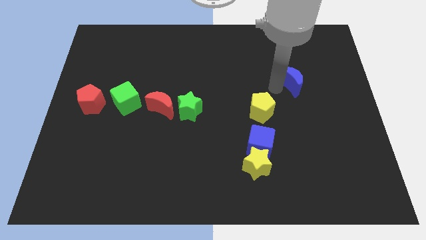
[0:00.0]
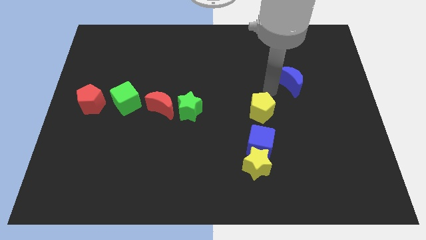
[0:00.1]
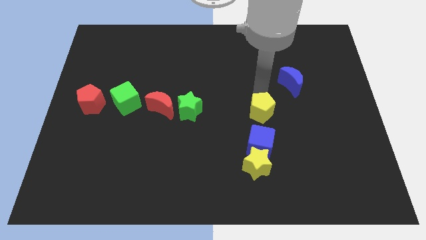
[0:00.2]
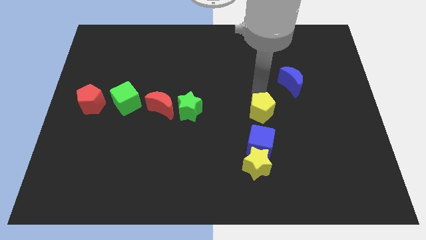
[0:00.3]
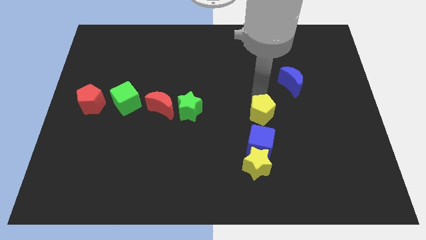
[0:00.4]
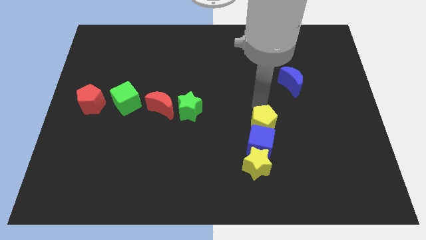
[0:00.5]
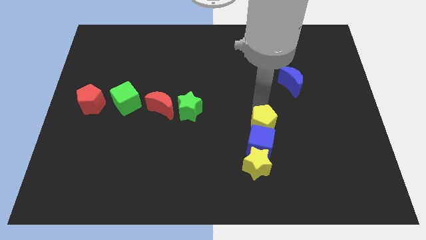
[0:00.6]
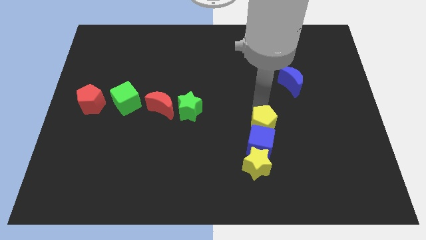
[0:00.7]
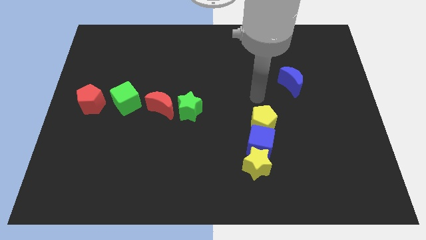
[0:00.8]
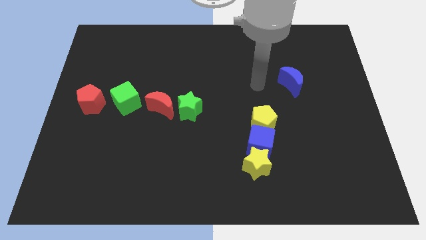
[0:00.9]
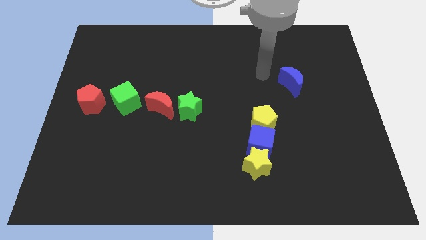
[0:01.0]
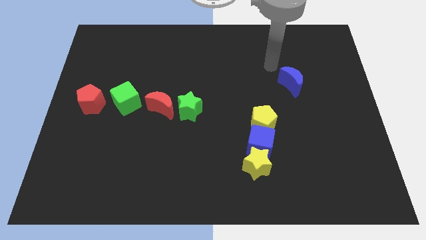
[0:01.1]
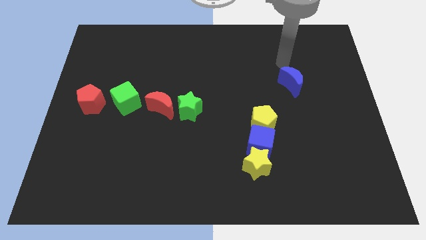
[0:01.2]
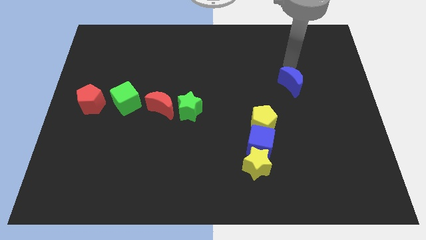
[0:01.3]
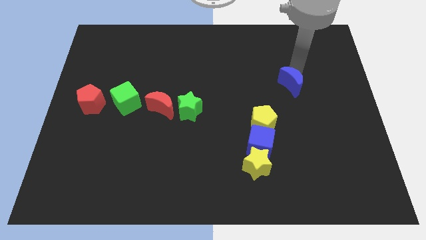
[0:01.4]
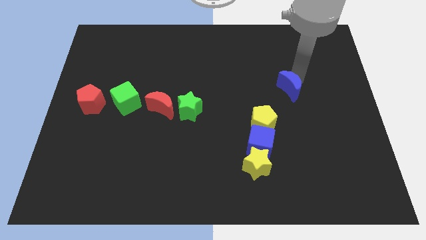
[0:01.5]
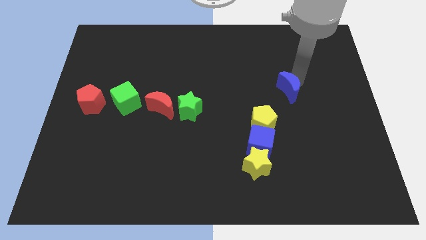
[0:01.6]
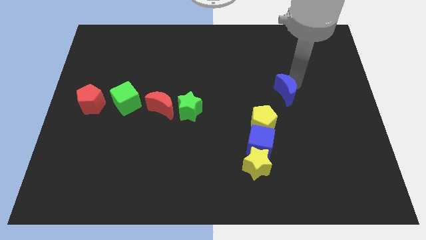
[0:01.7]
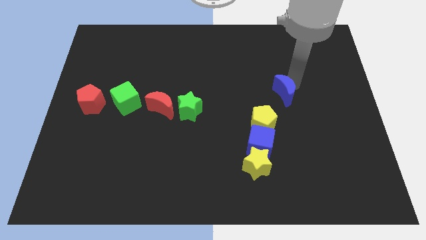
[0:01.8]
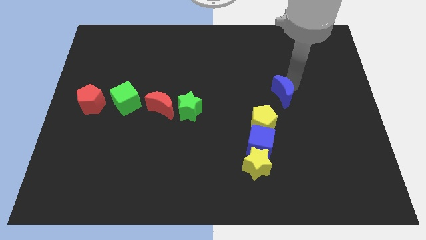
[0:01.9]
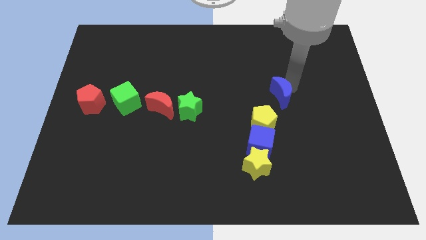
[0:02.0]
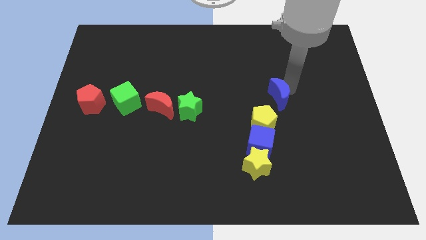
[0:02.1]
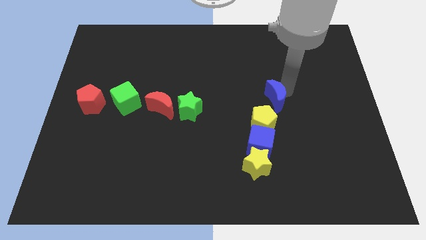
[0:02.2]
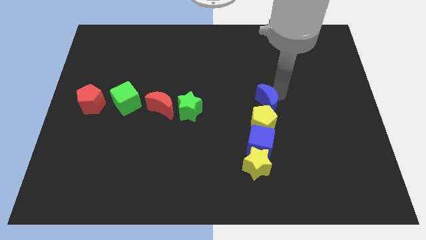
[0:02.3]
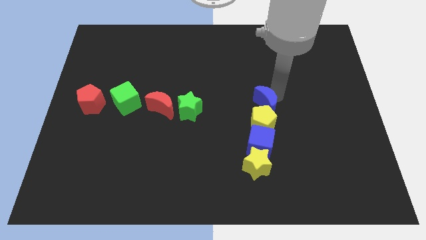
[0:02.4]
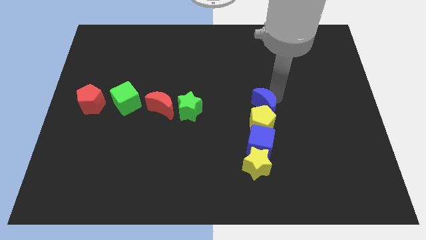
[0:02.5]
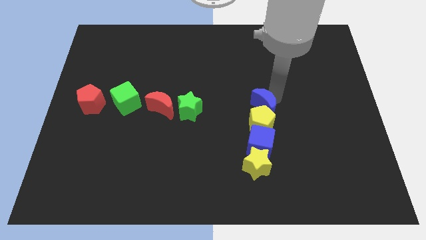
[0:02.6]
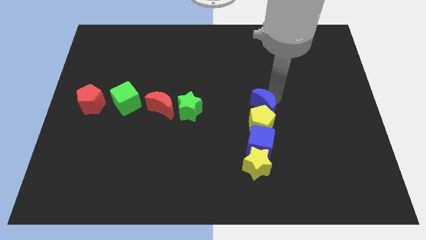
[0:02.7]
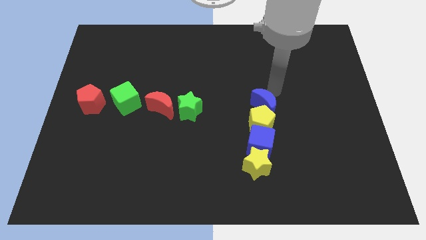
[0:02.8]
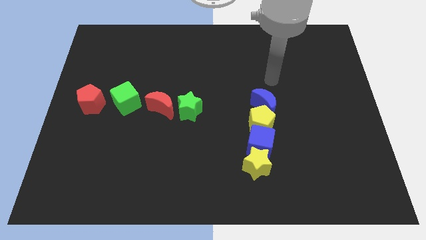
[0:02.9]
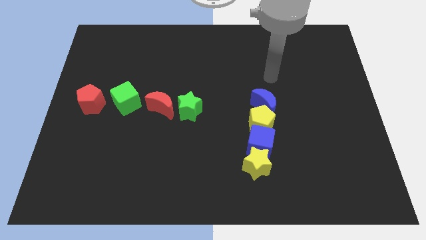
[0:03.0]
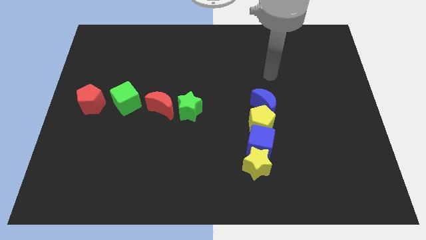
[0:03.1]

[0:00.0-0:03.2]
push the blue crescent into the yellow pentagon

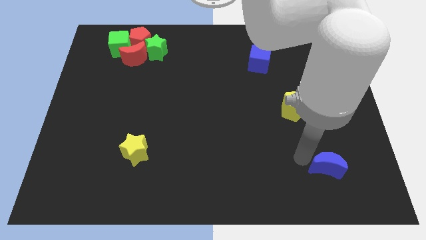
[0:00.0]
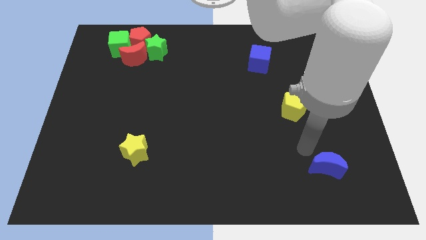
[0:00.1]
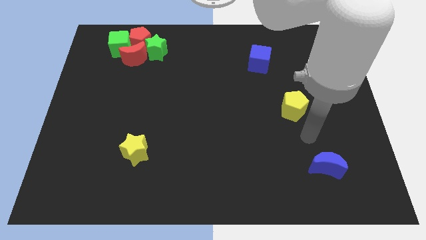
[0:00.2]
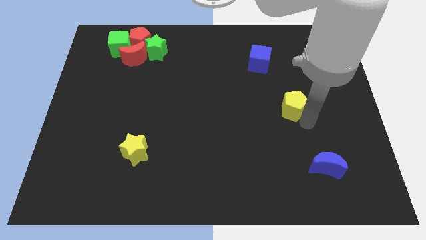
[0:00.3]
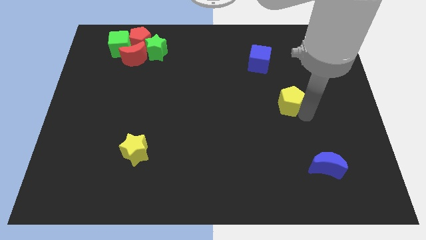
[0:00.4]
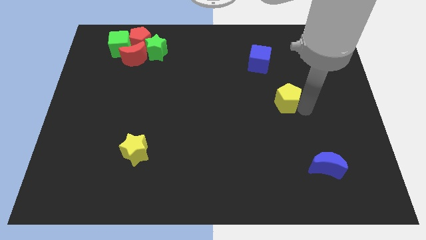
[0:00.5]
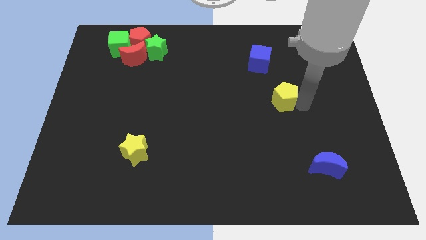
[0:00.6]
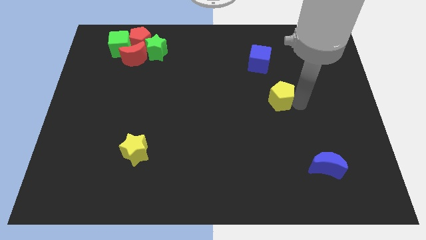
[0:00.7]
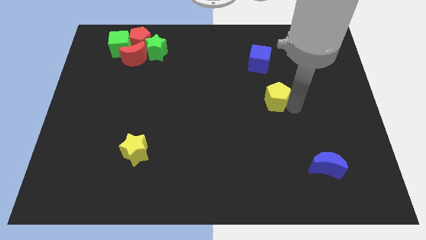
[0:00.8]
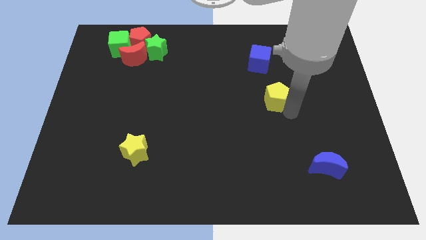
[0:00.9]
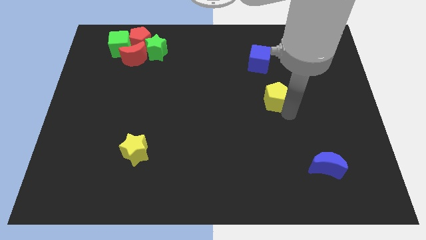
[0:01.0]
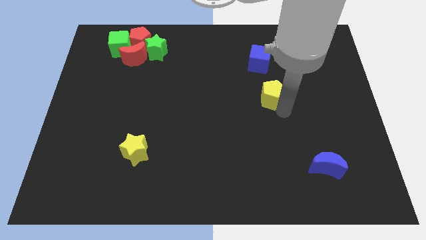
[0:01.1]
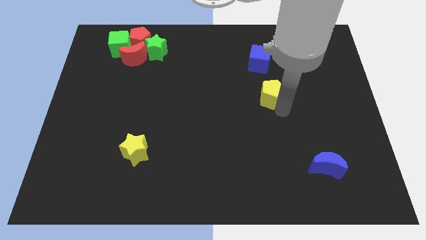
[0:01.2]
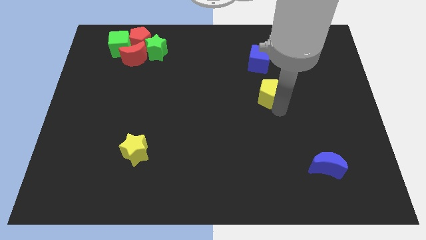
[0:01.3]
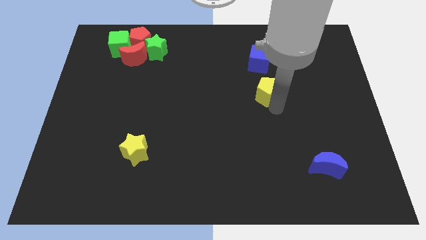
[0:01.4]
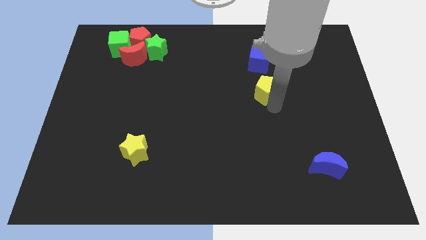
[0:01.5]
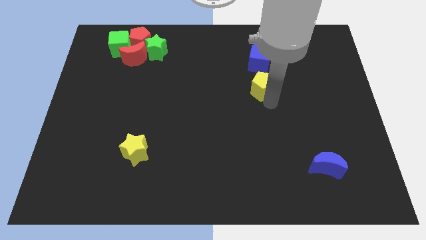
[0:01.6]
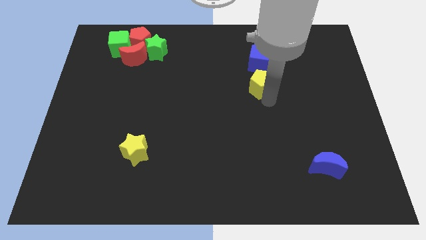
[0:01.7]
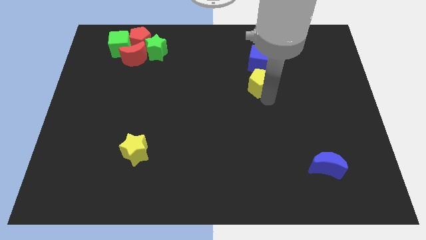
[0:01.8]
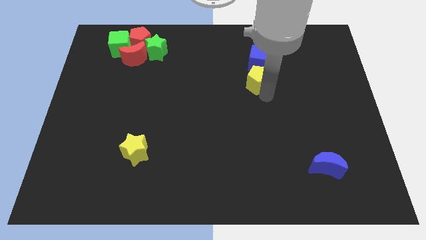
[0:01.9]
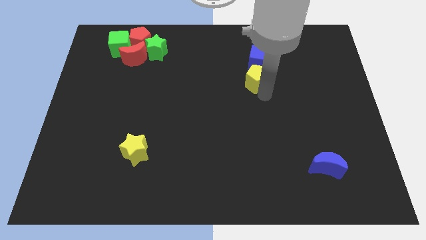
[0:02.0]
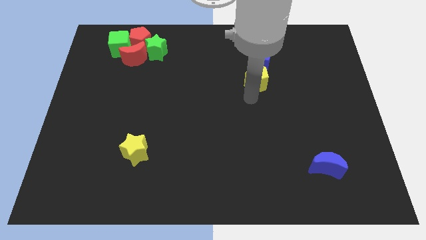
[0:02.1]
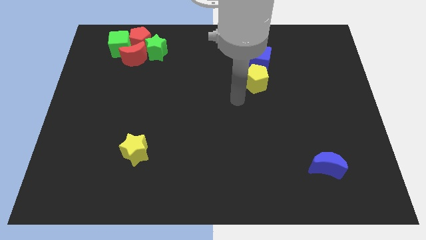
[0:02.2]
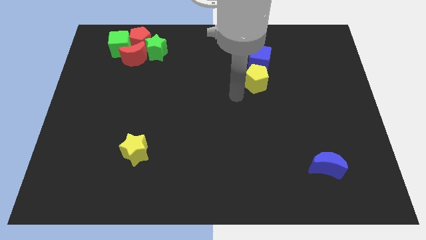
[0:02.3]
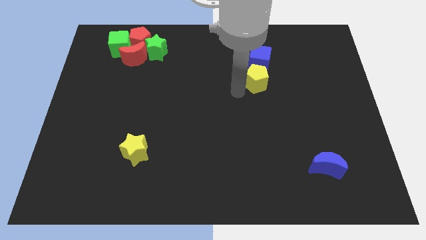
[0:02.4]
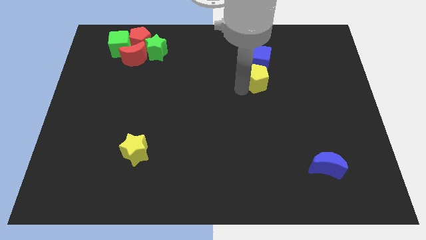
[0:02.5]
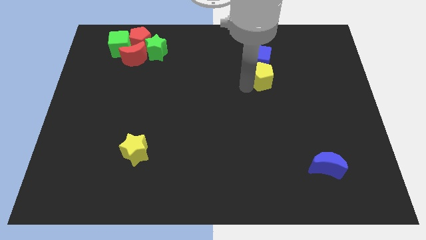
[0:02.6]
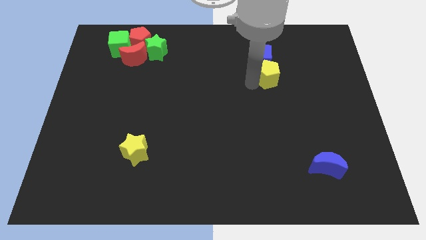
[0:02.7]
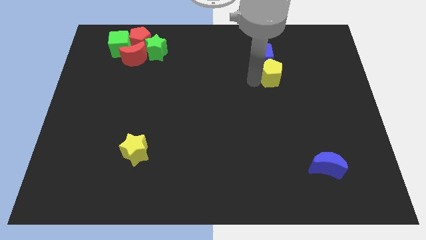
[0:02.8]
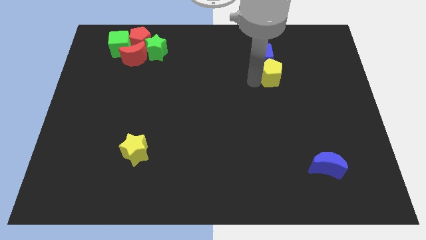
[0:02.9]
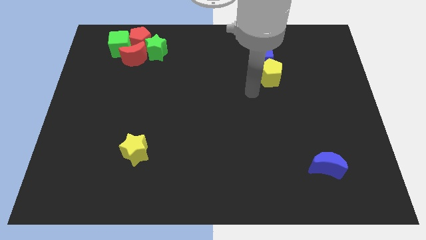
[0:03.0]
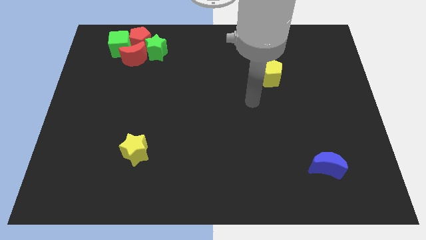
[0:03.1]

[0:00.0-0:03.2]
push the yellow pentagon towards the blue cube

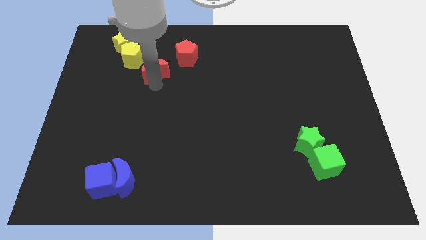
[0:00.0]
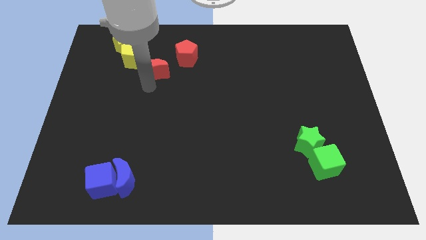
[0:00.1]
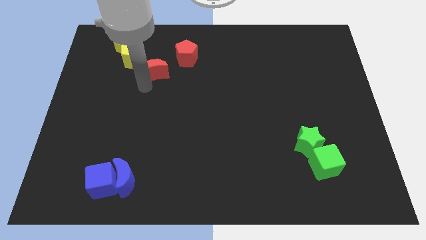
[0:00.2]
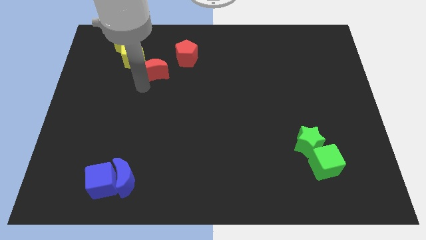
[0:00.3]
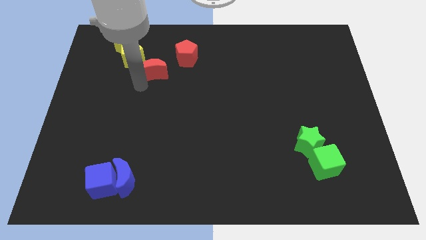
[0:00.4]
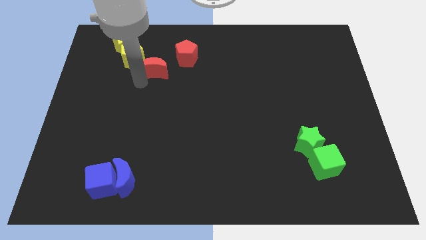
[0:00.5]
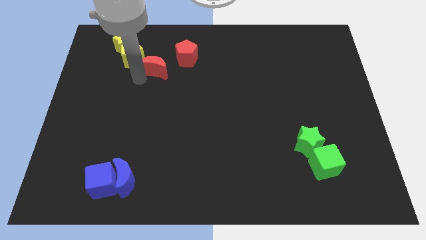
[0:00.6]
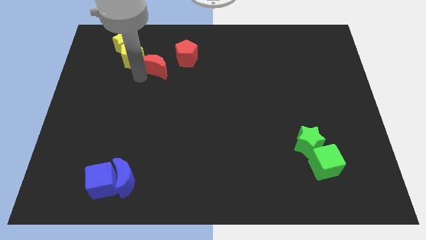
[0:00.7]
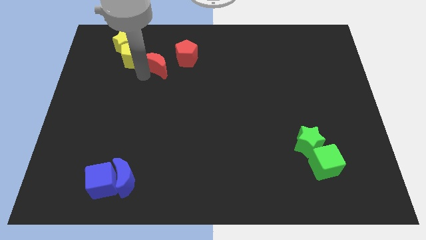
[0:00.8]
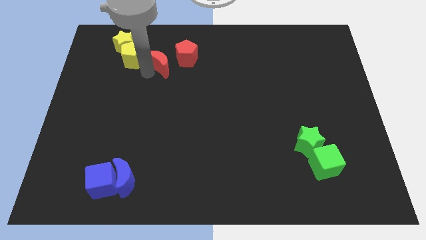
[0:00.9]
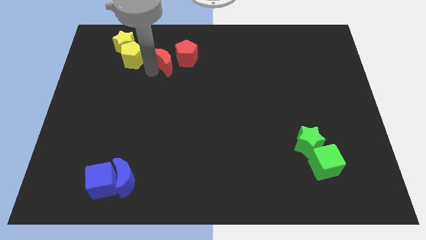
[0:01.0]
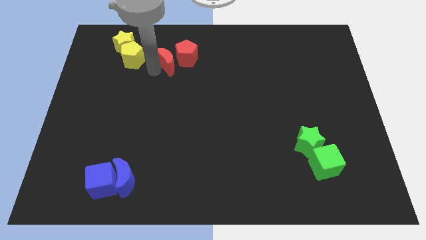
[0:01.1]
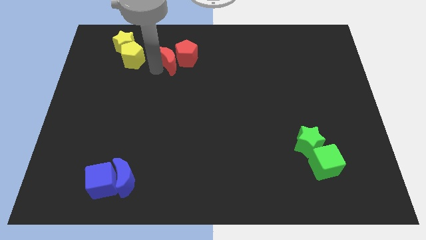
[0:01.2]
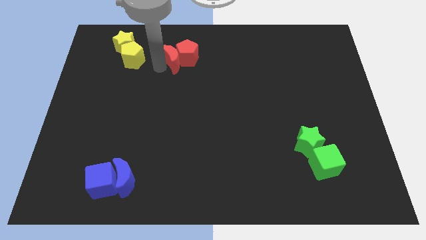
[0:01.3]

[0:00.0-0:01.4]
push red moon into the red pentagon

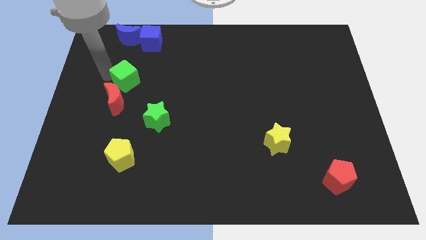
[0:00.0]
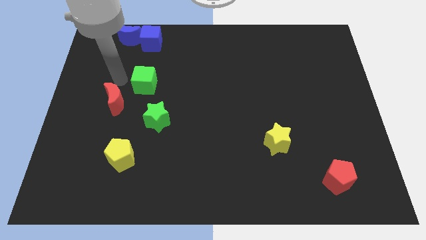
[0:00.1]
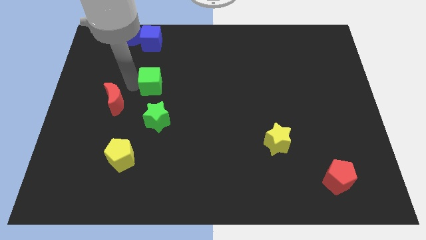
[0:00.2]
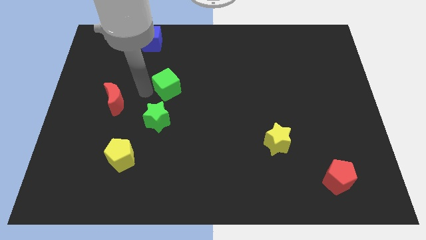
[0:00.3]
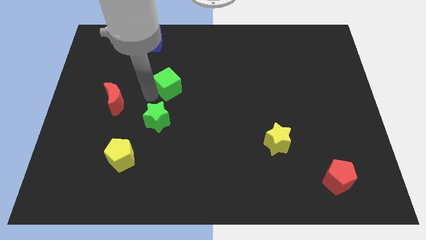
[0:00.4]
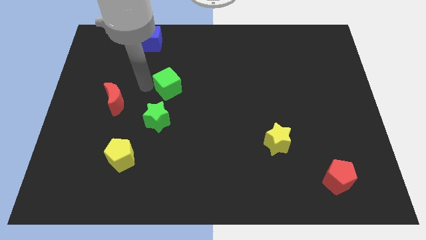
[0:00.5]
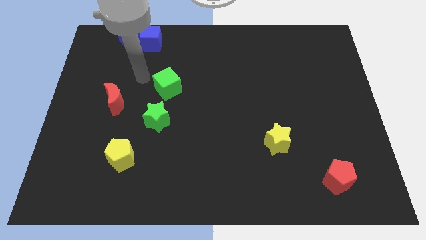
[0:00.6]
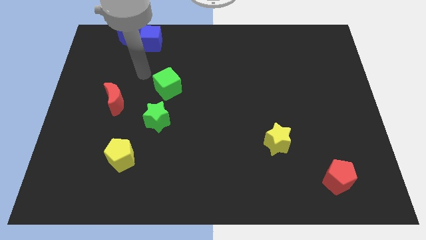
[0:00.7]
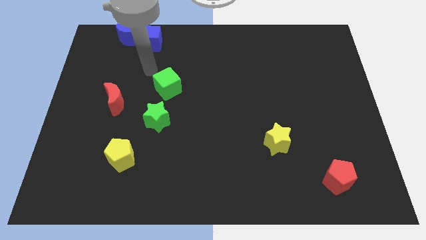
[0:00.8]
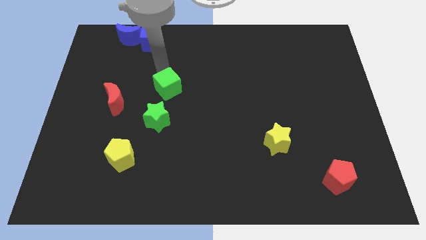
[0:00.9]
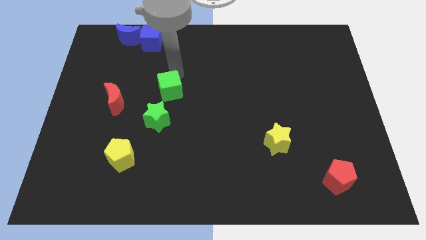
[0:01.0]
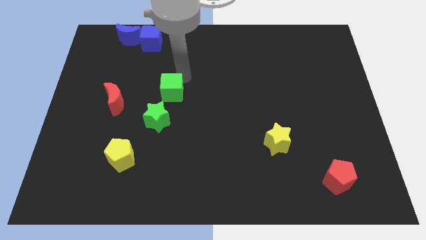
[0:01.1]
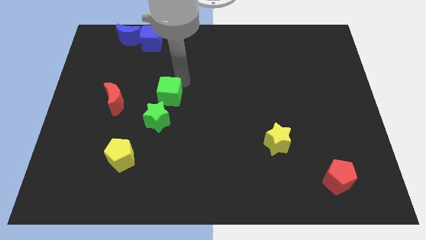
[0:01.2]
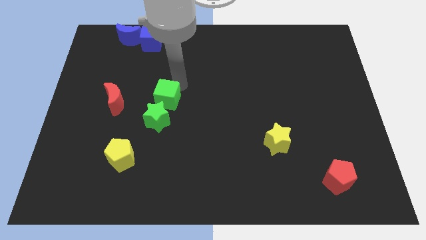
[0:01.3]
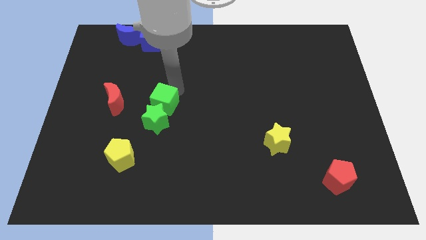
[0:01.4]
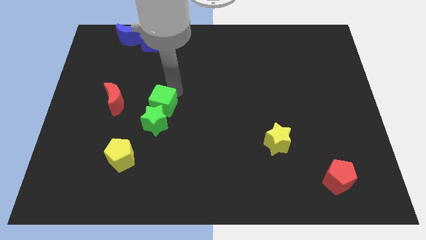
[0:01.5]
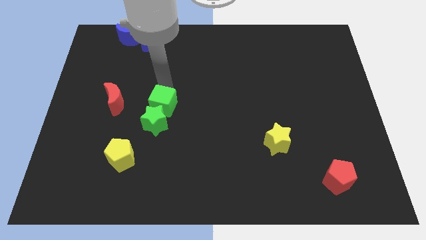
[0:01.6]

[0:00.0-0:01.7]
push the green cube into the green star
